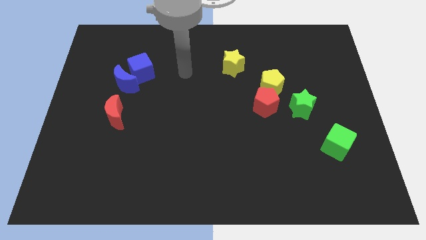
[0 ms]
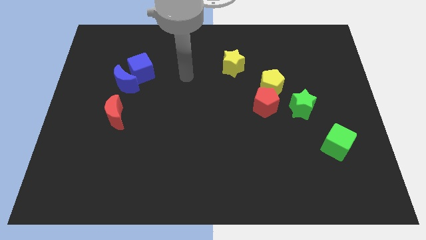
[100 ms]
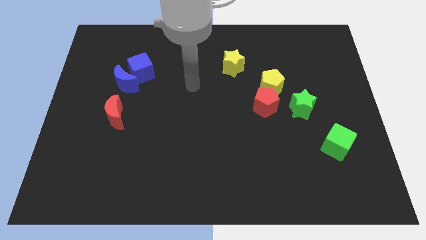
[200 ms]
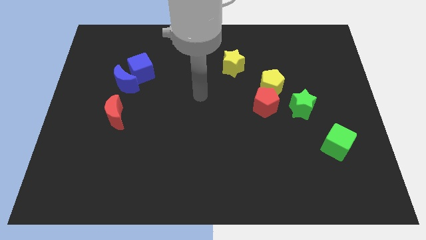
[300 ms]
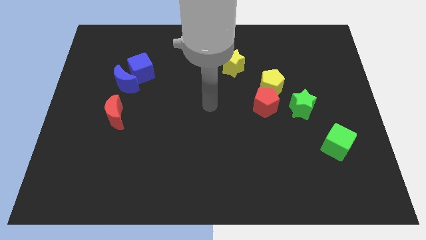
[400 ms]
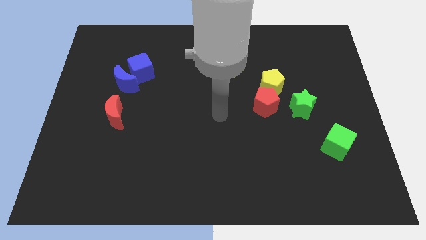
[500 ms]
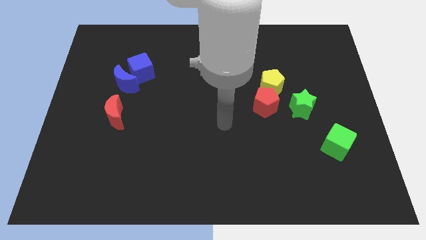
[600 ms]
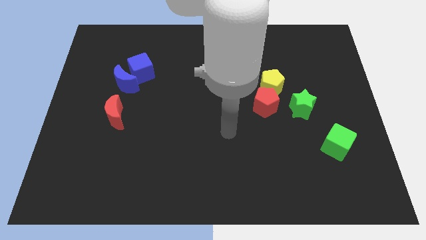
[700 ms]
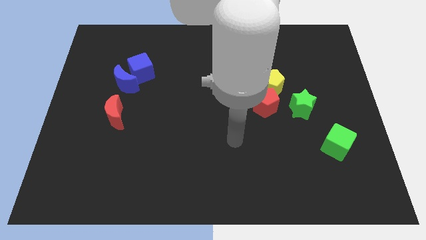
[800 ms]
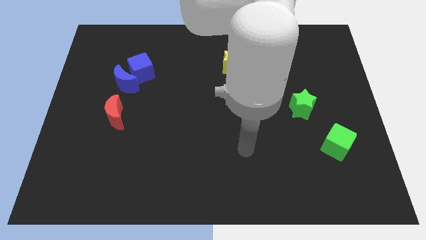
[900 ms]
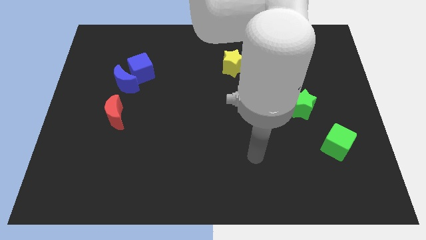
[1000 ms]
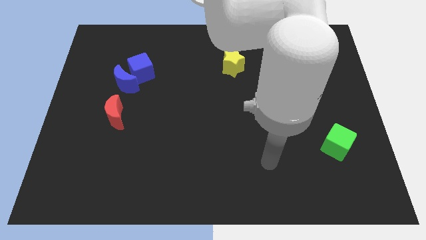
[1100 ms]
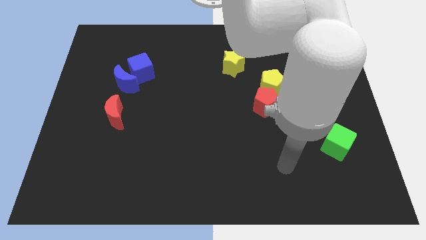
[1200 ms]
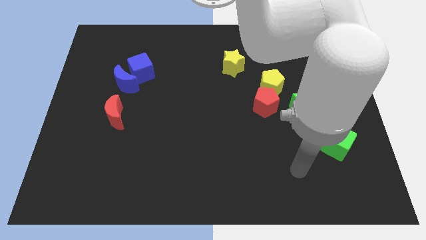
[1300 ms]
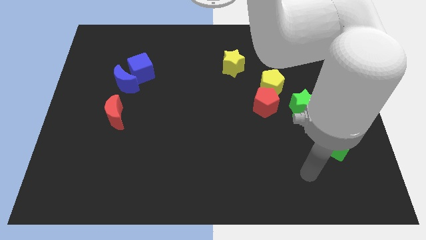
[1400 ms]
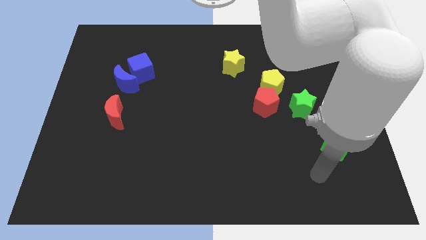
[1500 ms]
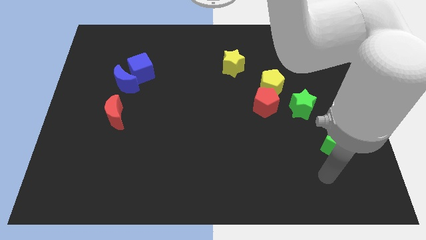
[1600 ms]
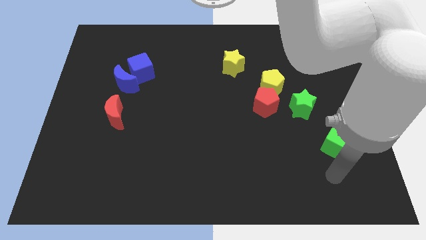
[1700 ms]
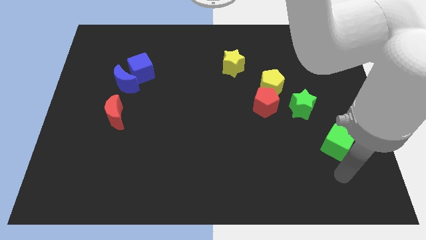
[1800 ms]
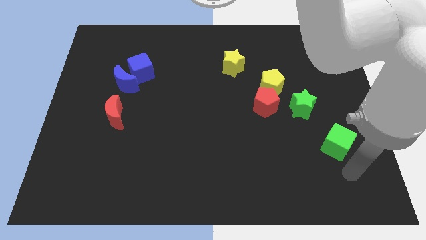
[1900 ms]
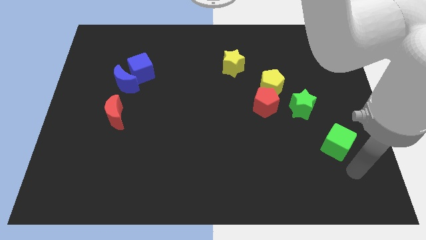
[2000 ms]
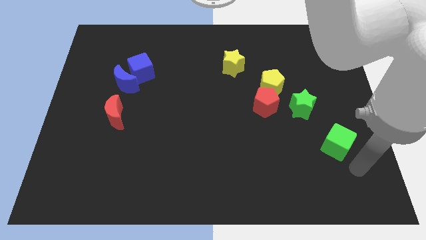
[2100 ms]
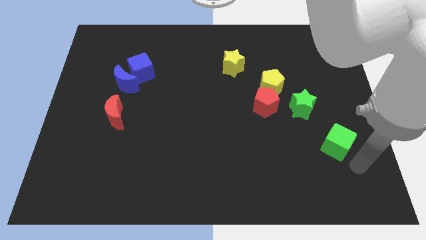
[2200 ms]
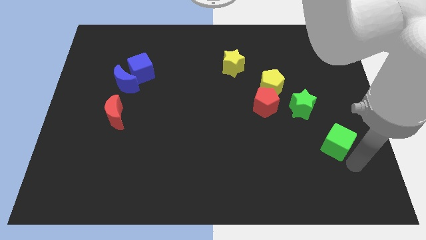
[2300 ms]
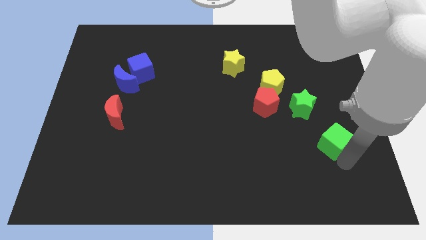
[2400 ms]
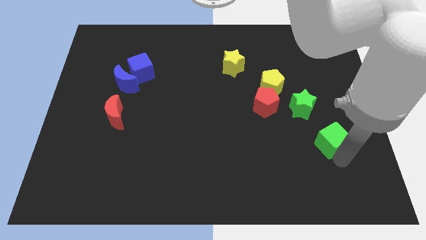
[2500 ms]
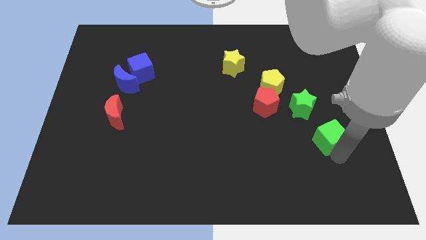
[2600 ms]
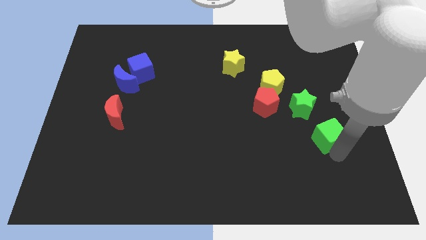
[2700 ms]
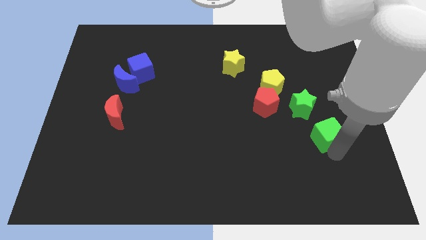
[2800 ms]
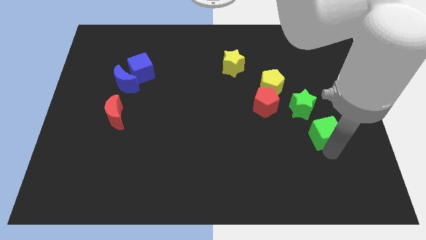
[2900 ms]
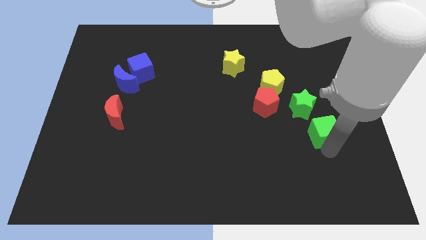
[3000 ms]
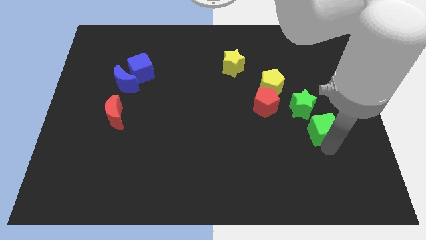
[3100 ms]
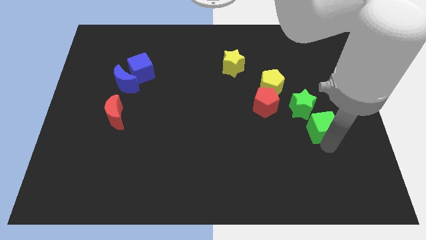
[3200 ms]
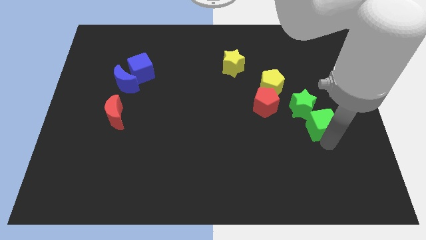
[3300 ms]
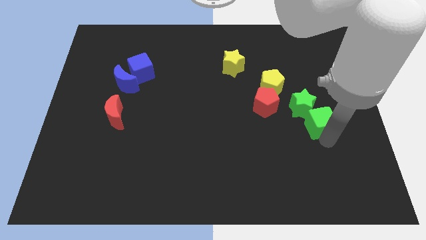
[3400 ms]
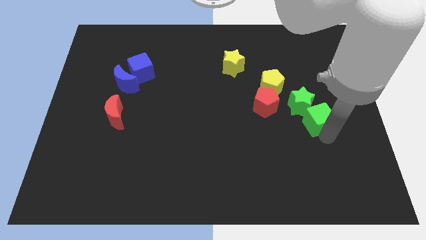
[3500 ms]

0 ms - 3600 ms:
slide the green cube into the bottom left side of the green star

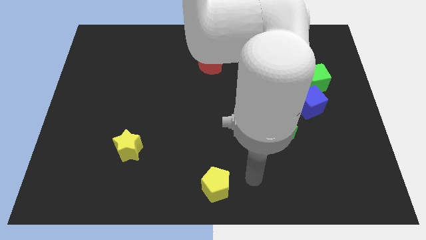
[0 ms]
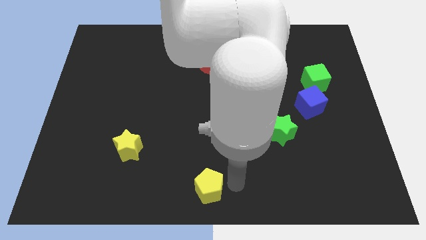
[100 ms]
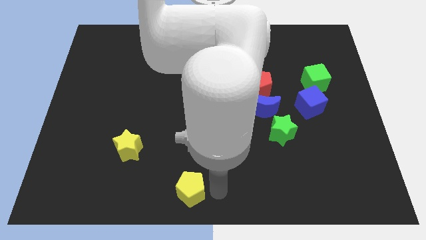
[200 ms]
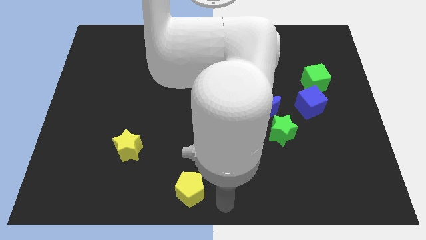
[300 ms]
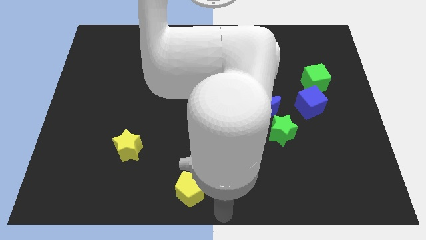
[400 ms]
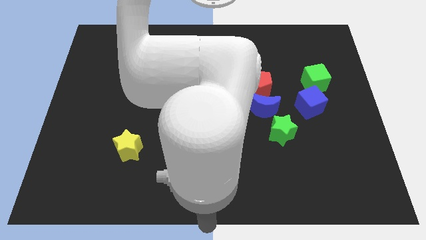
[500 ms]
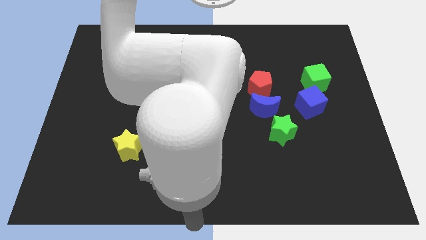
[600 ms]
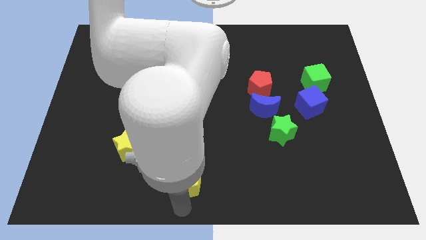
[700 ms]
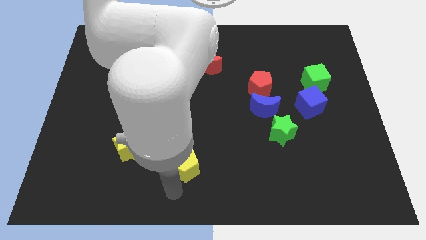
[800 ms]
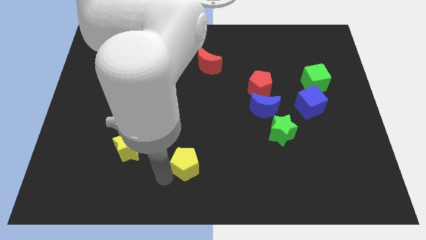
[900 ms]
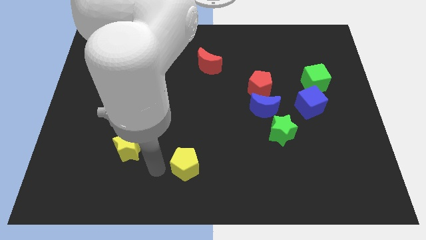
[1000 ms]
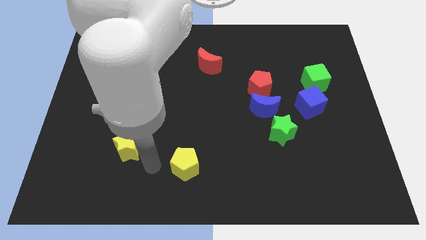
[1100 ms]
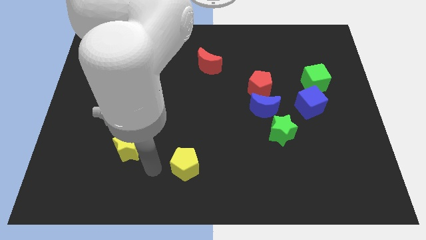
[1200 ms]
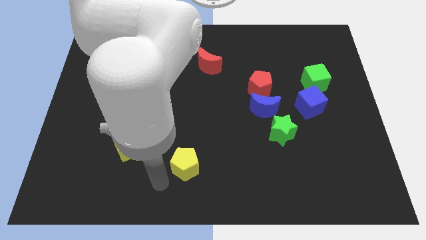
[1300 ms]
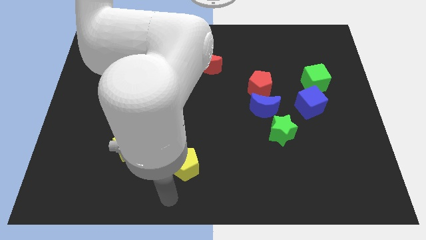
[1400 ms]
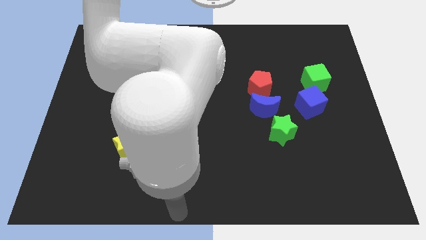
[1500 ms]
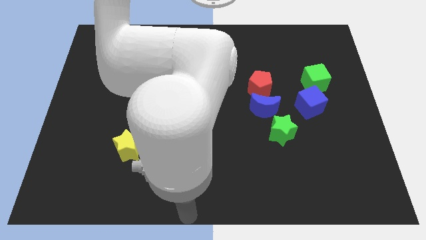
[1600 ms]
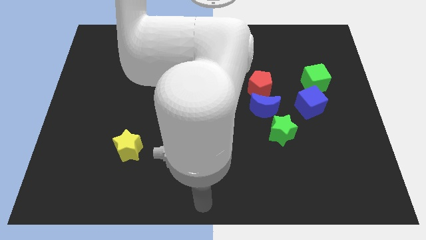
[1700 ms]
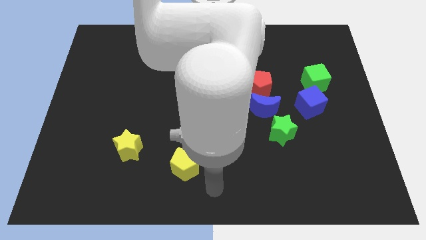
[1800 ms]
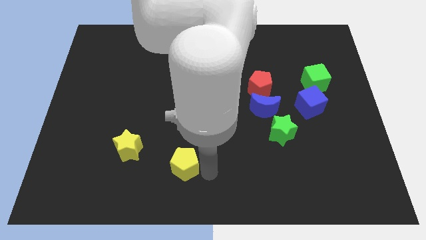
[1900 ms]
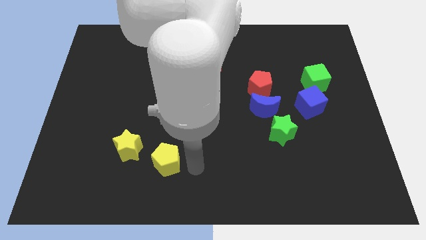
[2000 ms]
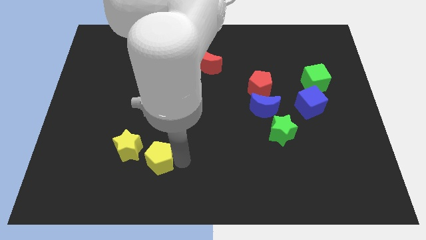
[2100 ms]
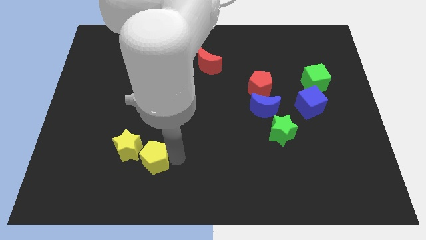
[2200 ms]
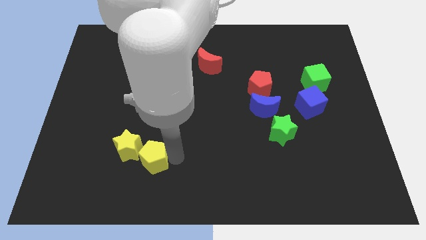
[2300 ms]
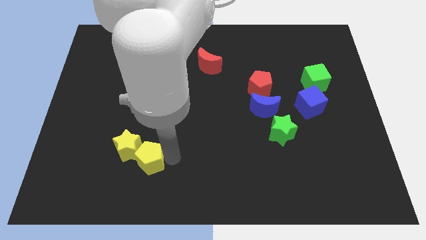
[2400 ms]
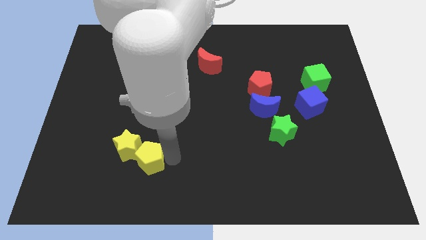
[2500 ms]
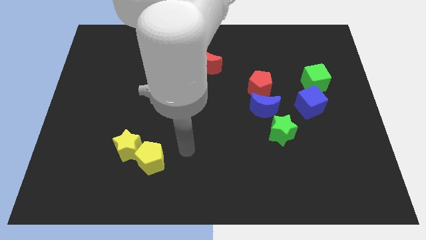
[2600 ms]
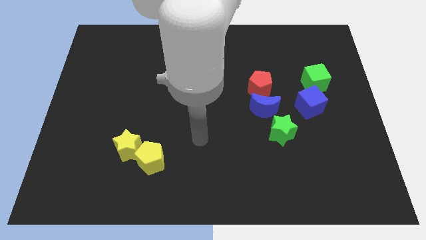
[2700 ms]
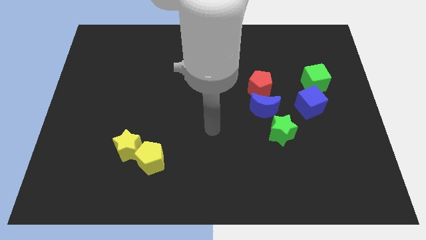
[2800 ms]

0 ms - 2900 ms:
place the yellow pentagon to the right of the yellow star

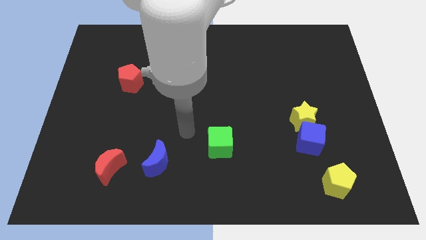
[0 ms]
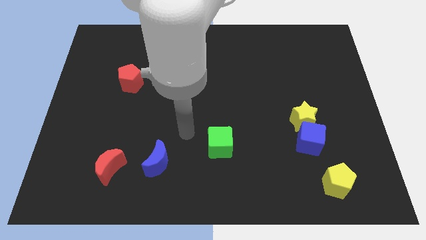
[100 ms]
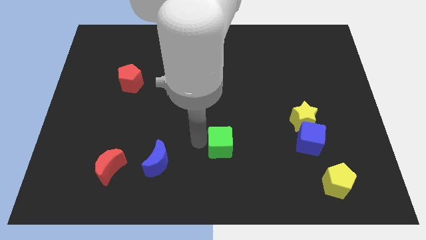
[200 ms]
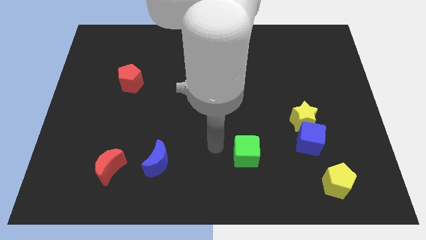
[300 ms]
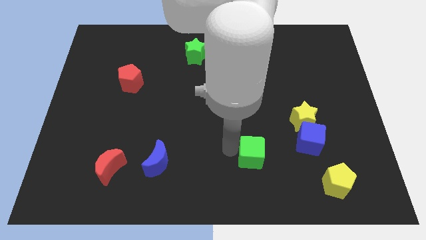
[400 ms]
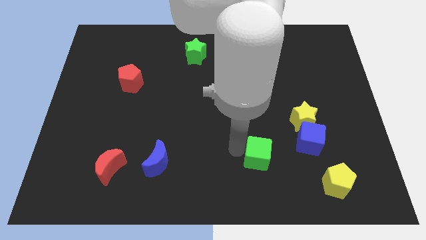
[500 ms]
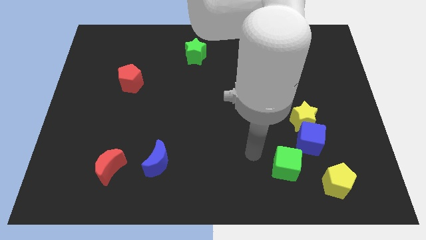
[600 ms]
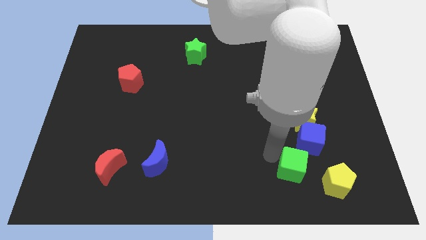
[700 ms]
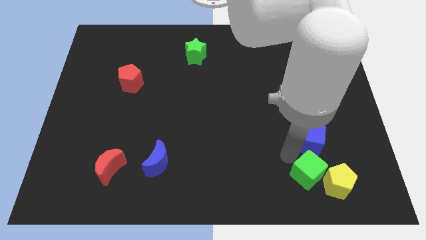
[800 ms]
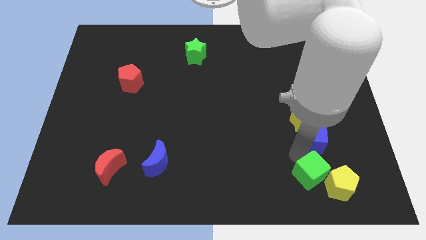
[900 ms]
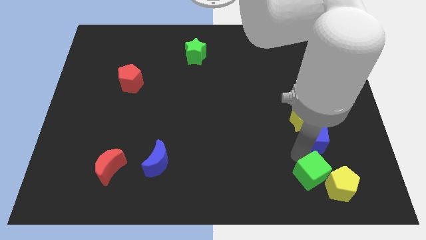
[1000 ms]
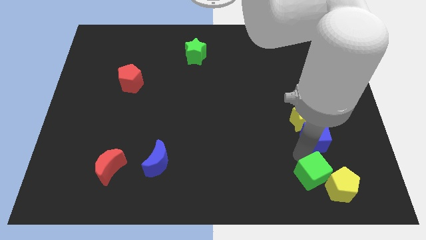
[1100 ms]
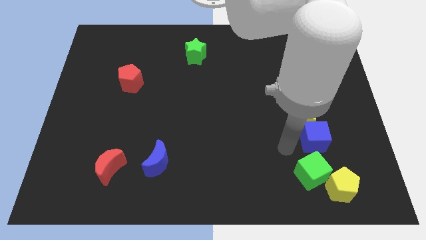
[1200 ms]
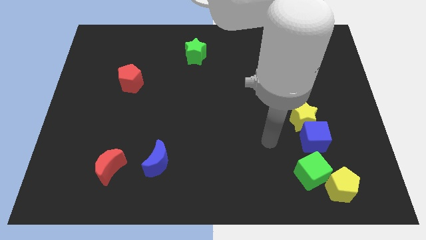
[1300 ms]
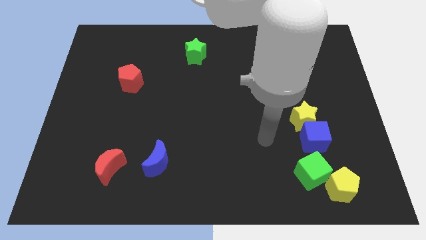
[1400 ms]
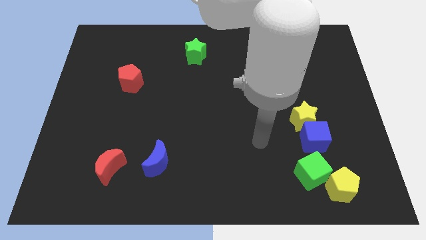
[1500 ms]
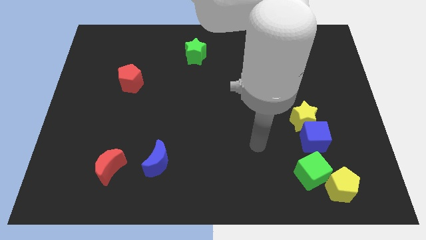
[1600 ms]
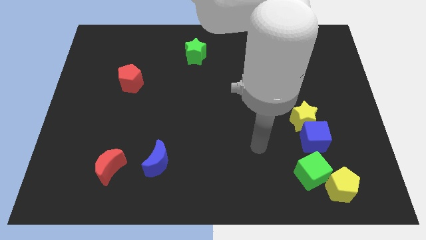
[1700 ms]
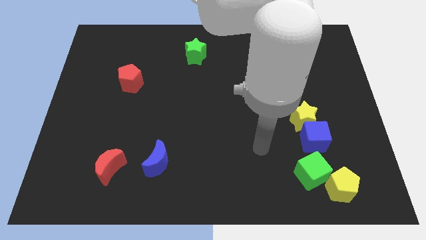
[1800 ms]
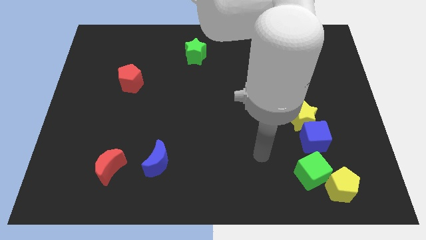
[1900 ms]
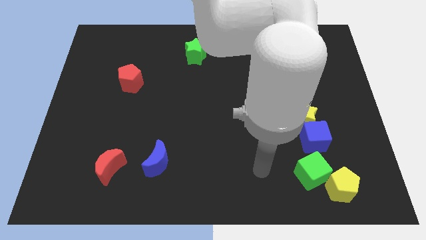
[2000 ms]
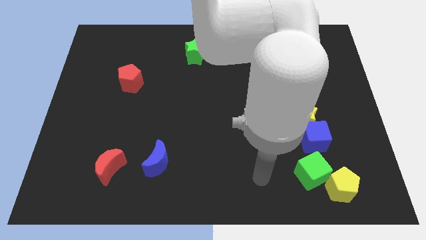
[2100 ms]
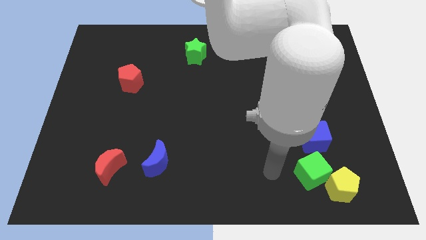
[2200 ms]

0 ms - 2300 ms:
push the green cube to the right bottom of the board

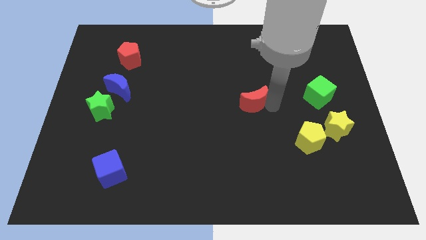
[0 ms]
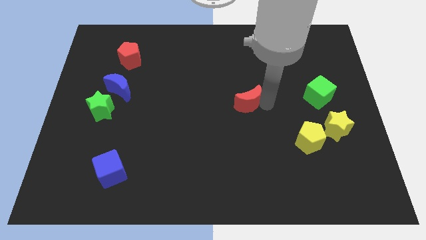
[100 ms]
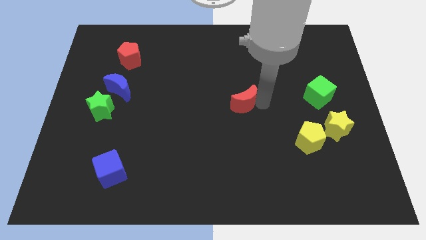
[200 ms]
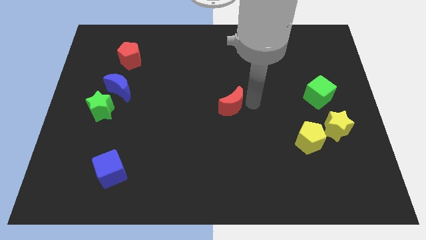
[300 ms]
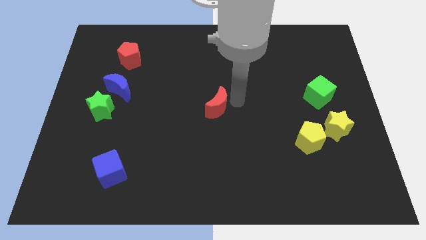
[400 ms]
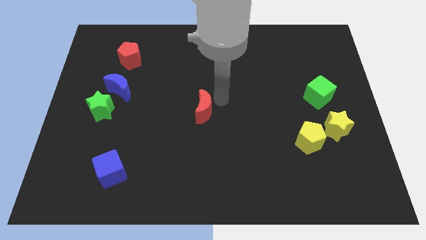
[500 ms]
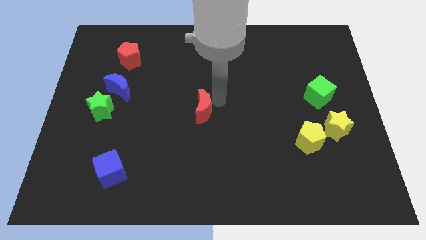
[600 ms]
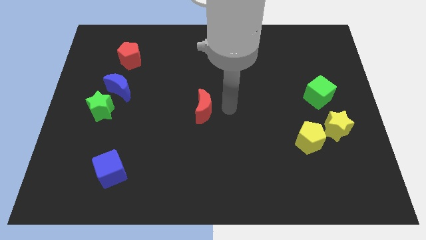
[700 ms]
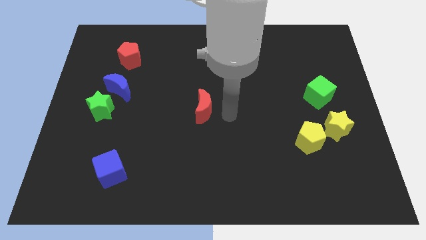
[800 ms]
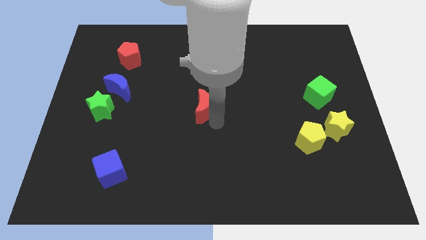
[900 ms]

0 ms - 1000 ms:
place the red crescent at center of the board
